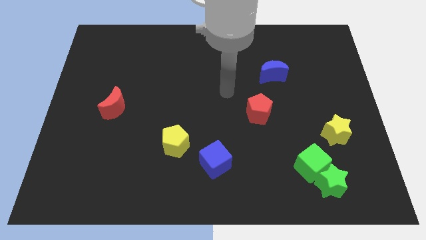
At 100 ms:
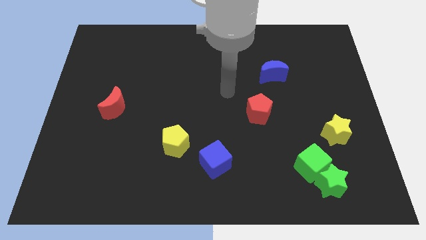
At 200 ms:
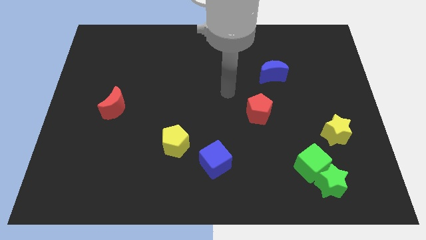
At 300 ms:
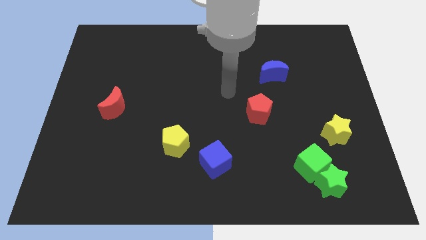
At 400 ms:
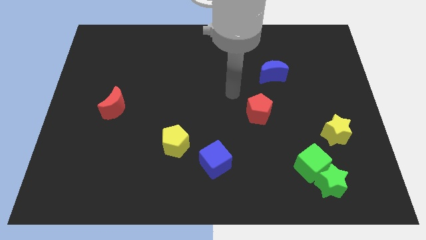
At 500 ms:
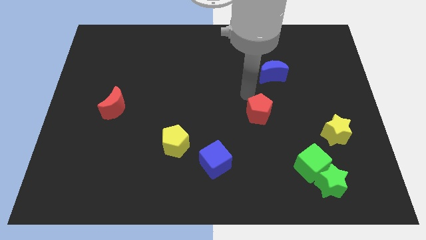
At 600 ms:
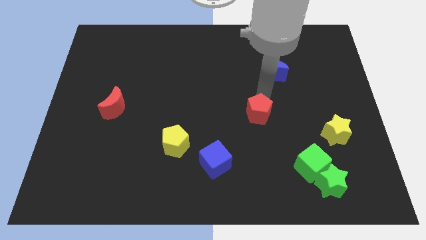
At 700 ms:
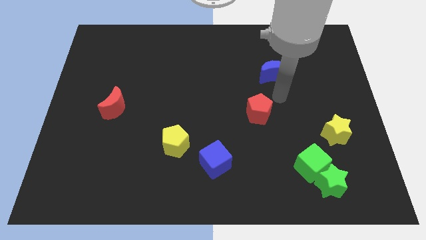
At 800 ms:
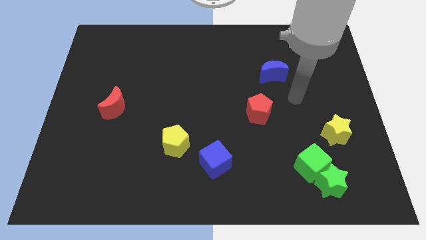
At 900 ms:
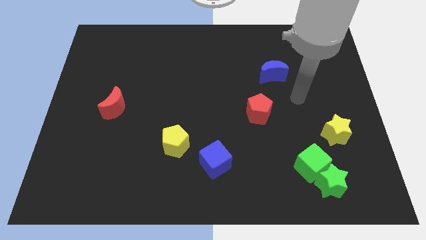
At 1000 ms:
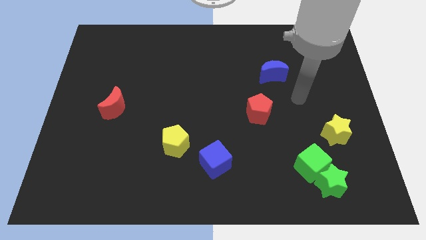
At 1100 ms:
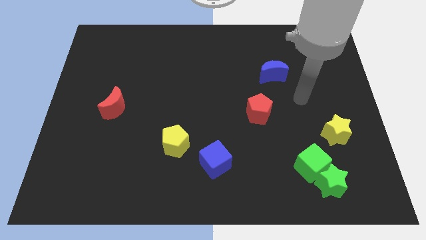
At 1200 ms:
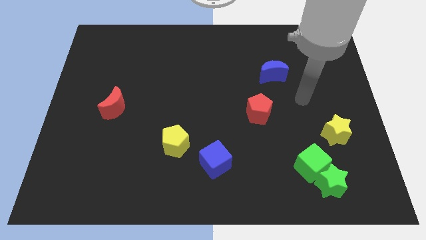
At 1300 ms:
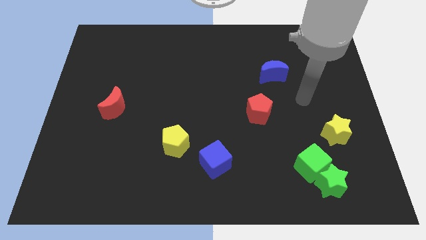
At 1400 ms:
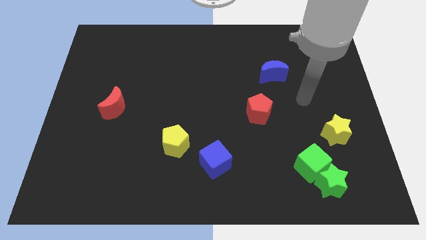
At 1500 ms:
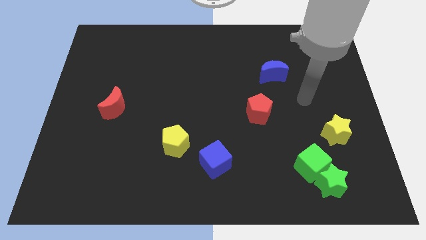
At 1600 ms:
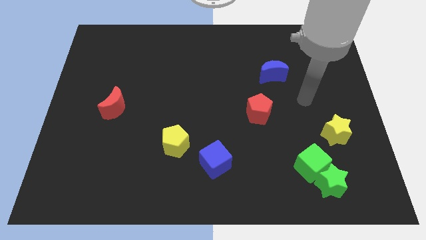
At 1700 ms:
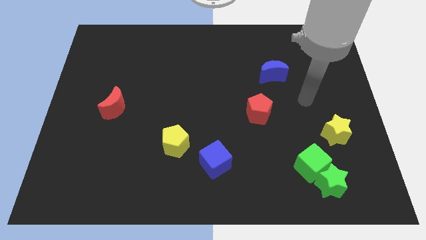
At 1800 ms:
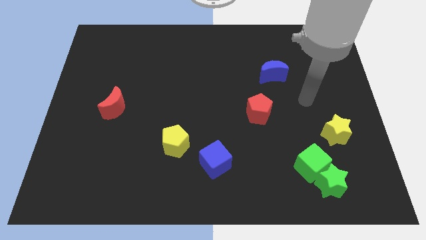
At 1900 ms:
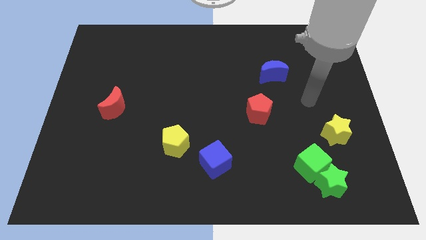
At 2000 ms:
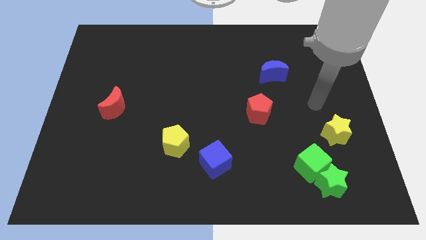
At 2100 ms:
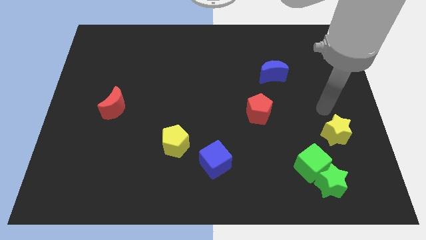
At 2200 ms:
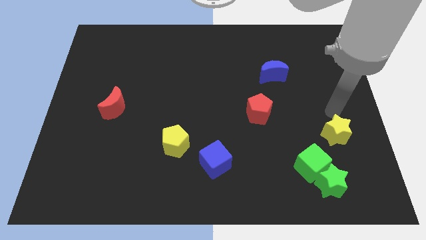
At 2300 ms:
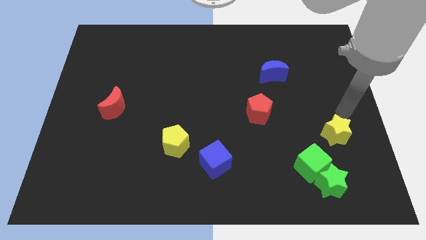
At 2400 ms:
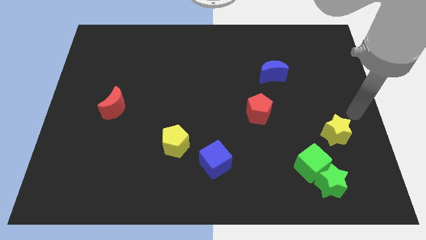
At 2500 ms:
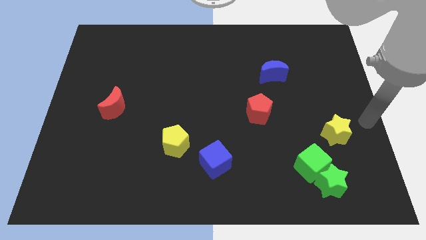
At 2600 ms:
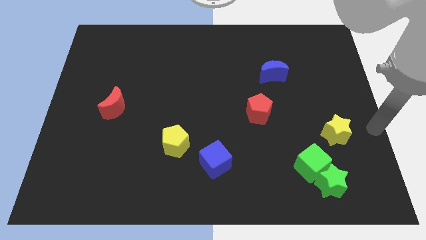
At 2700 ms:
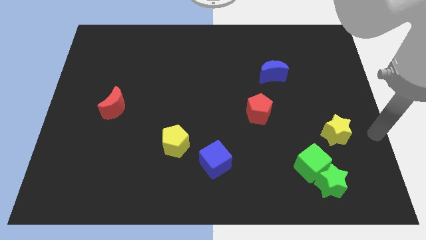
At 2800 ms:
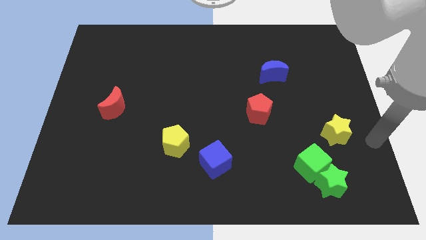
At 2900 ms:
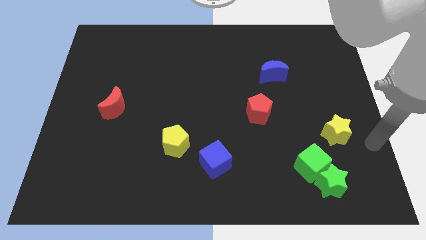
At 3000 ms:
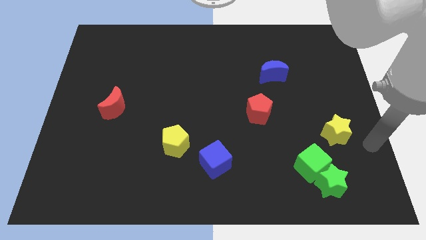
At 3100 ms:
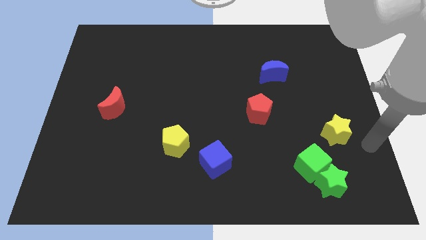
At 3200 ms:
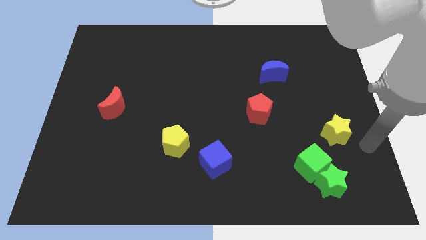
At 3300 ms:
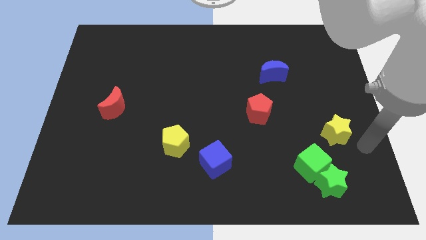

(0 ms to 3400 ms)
move the arm to the bottom right side of the yellow star

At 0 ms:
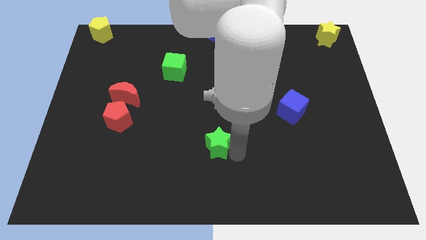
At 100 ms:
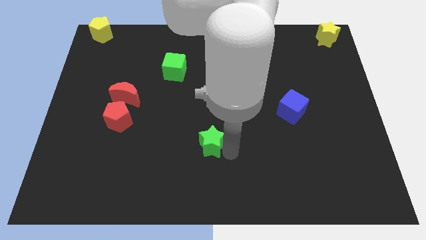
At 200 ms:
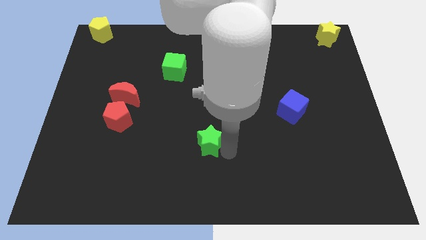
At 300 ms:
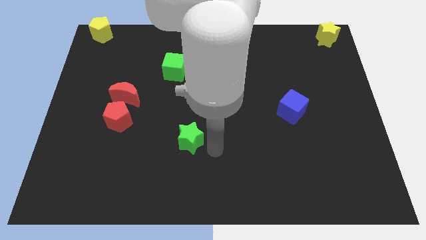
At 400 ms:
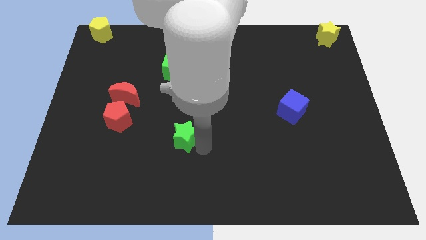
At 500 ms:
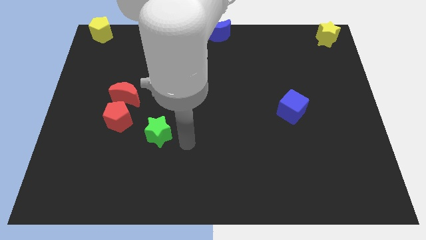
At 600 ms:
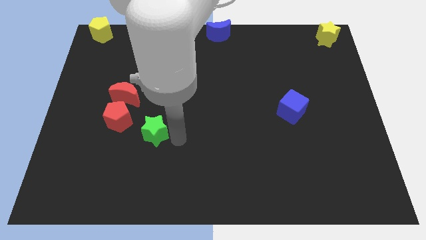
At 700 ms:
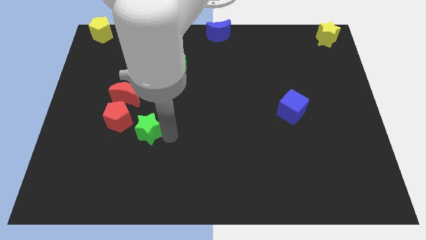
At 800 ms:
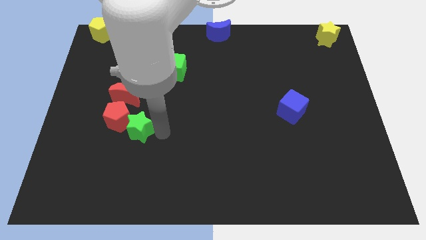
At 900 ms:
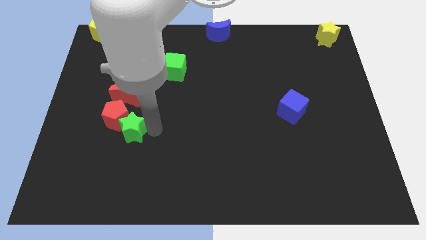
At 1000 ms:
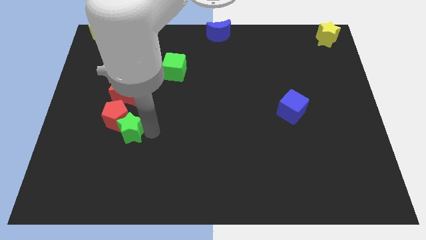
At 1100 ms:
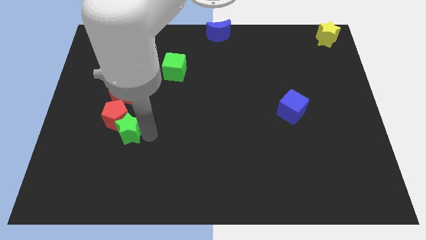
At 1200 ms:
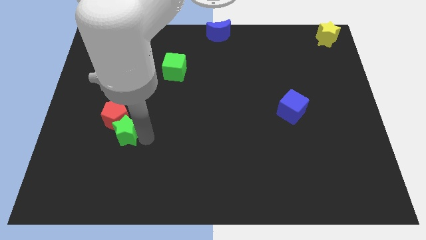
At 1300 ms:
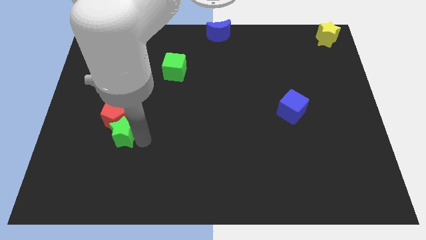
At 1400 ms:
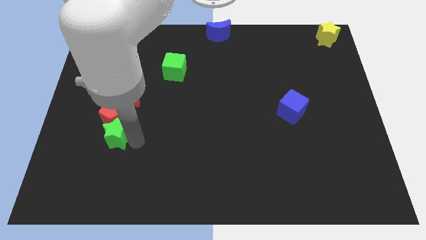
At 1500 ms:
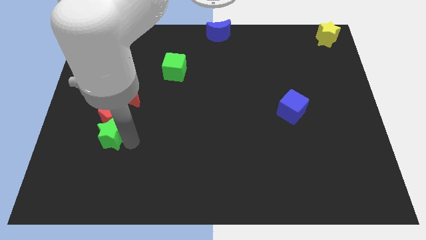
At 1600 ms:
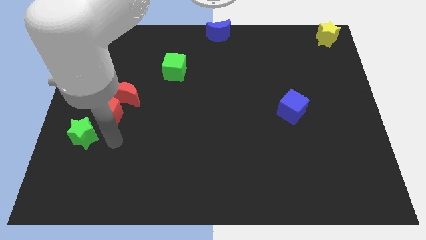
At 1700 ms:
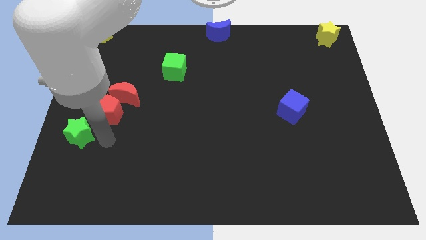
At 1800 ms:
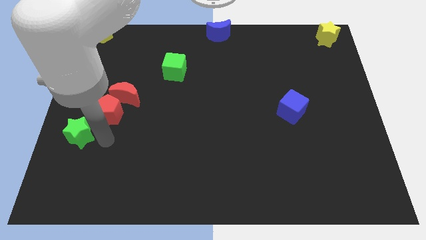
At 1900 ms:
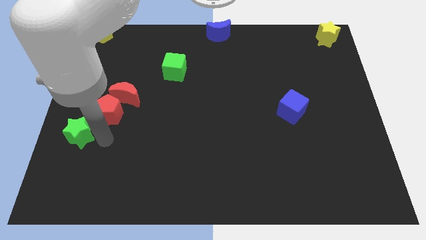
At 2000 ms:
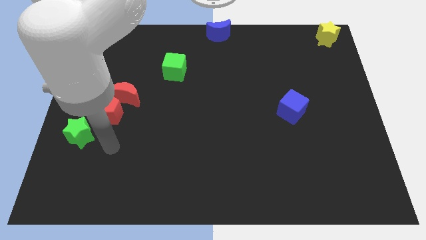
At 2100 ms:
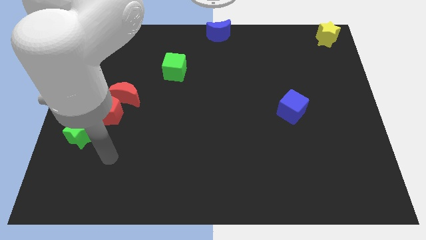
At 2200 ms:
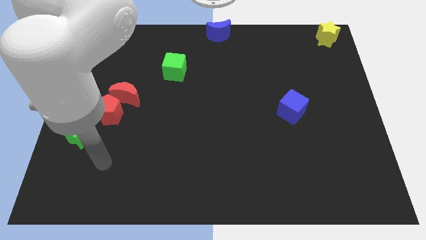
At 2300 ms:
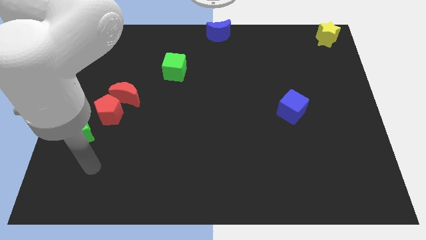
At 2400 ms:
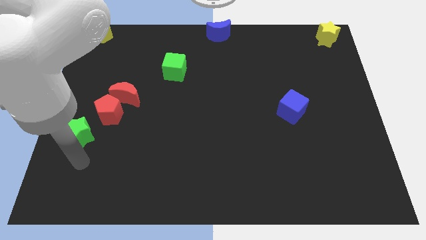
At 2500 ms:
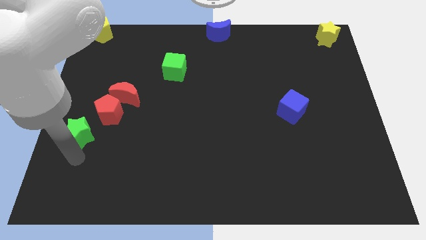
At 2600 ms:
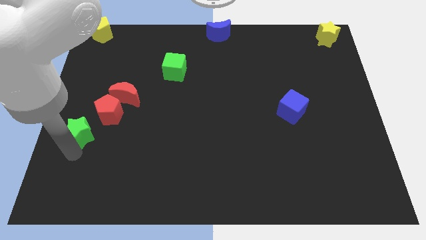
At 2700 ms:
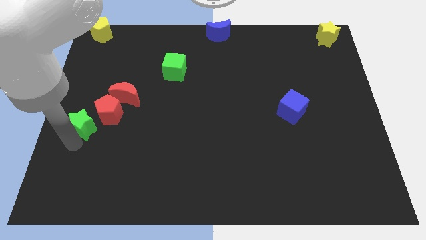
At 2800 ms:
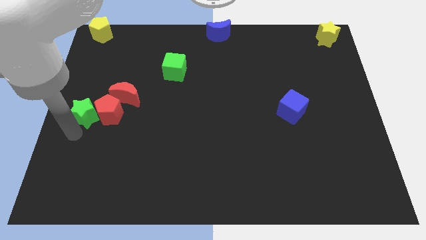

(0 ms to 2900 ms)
push the green star to the left of the red pentagon

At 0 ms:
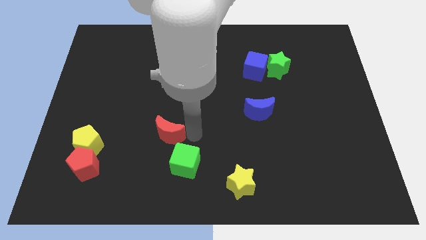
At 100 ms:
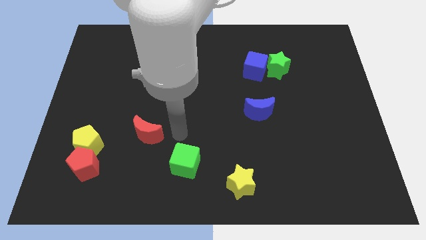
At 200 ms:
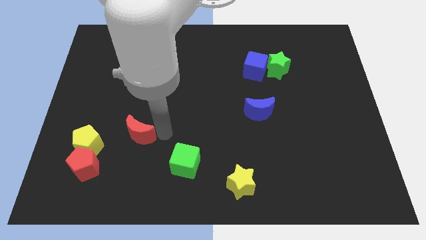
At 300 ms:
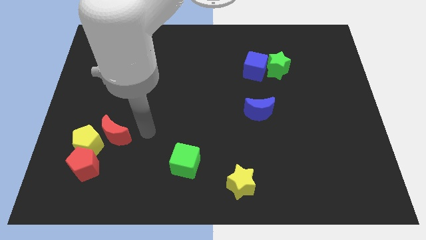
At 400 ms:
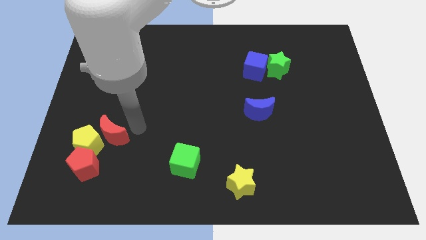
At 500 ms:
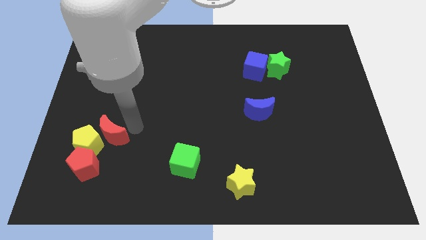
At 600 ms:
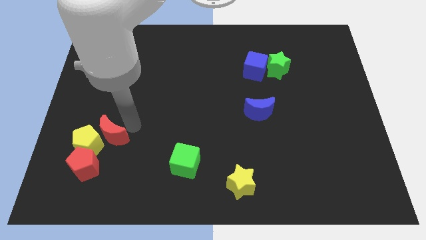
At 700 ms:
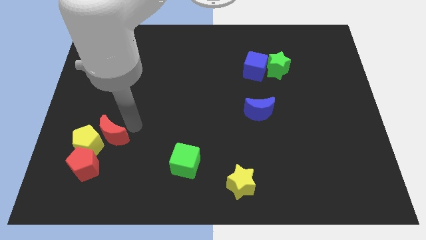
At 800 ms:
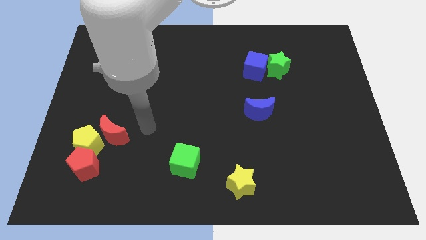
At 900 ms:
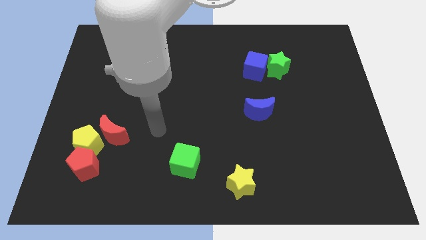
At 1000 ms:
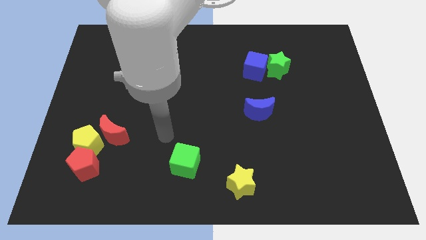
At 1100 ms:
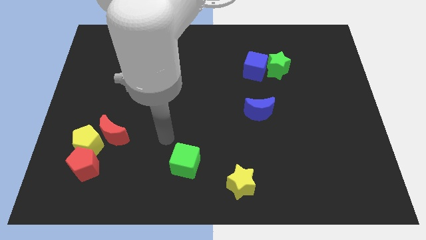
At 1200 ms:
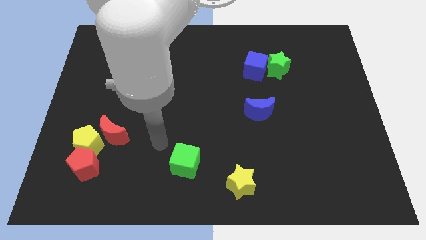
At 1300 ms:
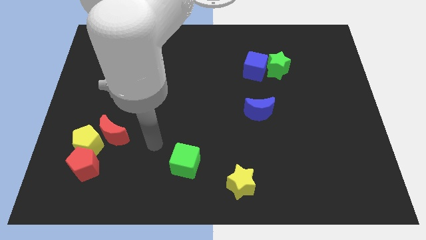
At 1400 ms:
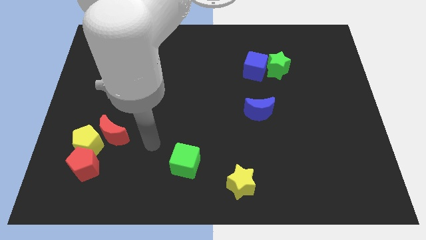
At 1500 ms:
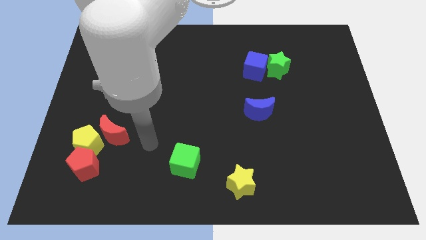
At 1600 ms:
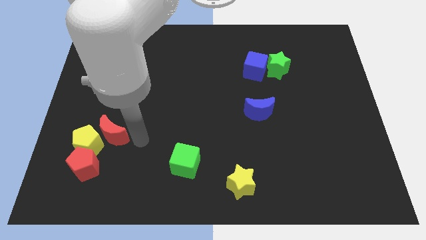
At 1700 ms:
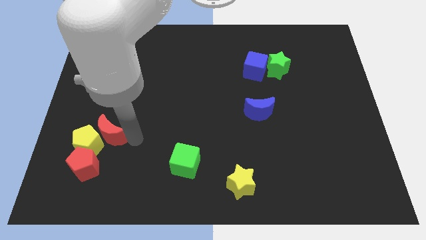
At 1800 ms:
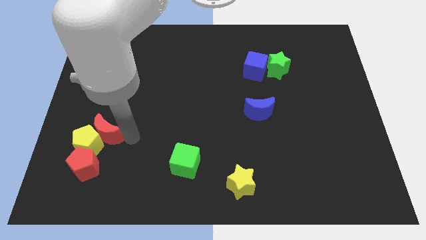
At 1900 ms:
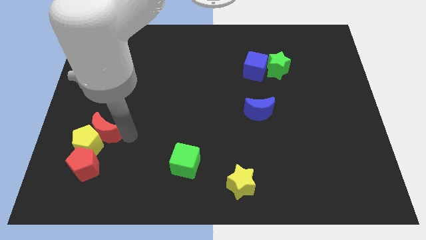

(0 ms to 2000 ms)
push the red moon towards the left side of the board

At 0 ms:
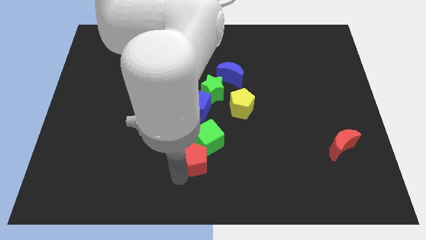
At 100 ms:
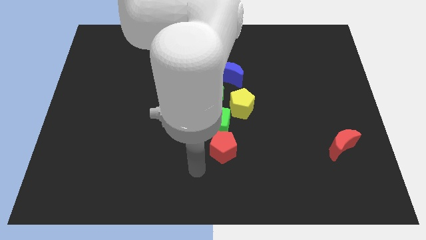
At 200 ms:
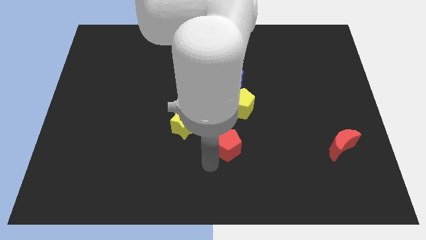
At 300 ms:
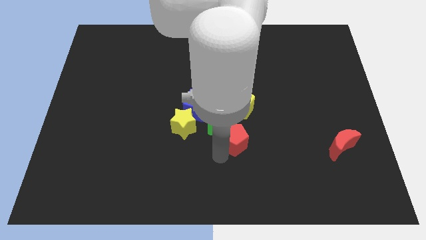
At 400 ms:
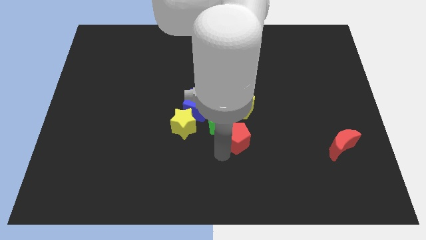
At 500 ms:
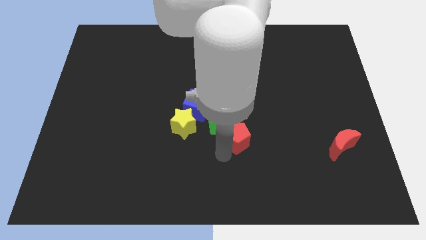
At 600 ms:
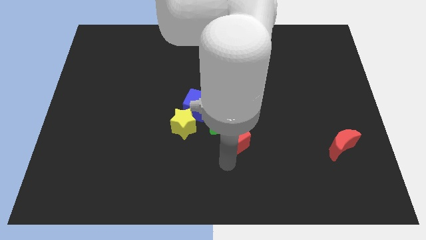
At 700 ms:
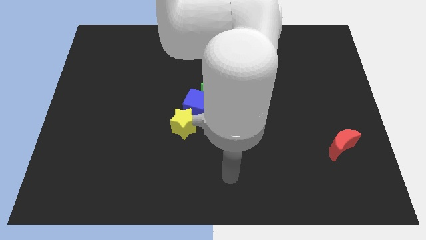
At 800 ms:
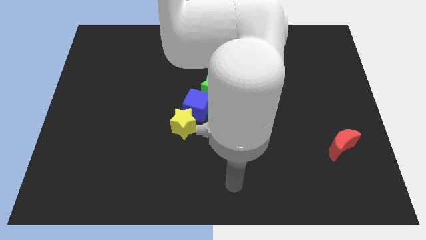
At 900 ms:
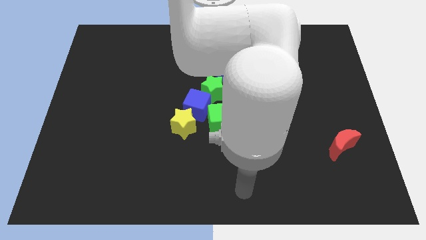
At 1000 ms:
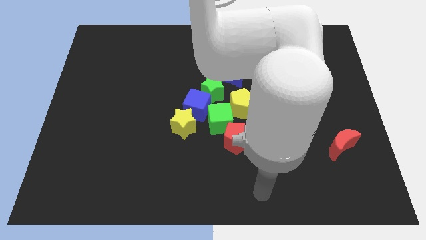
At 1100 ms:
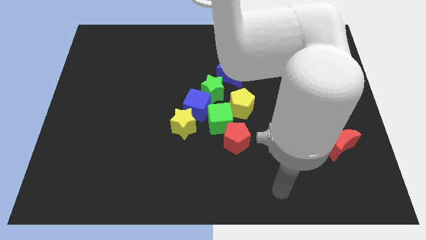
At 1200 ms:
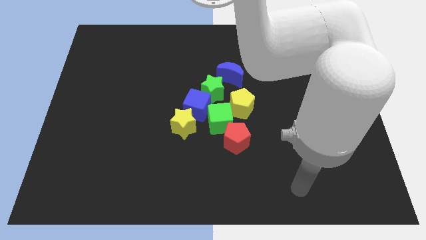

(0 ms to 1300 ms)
drag the red pentagon to the green cube
